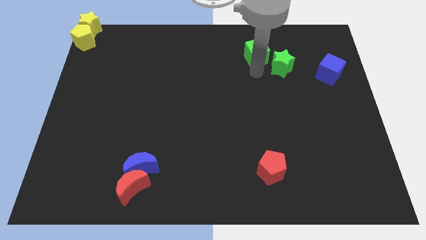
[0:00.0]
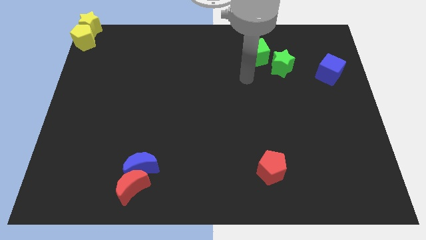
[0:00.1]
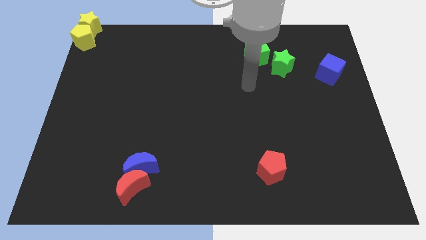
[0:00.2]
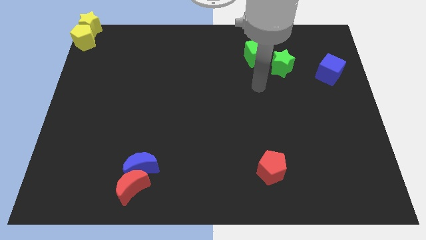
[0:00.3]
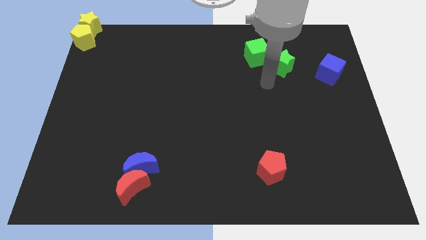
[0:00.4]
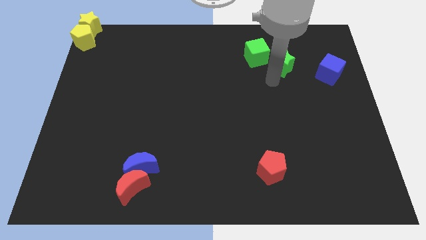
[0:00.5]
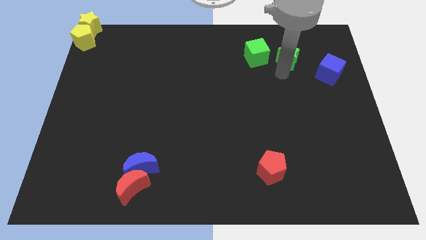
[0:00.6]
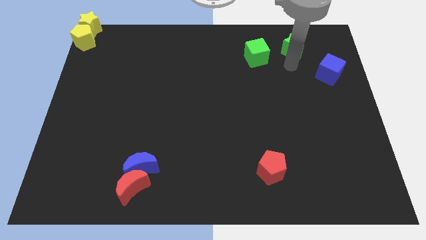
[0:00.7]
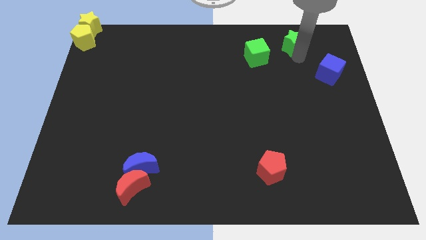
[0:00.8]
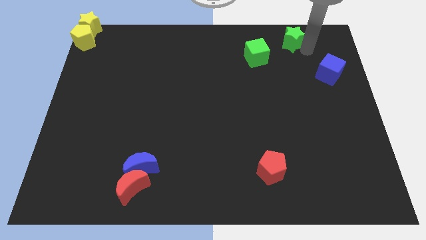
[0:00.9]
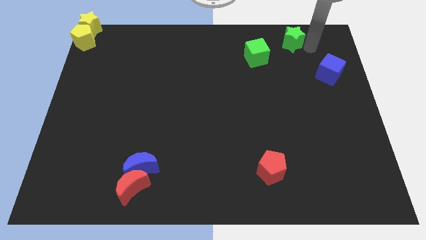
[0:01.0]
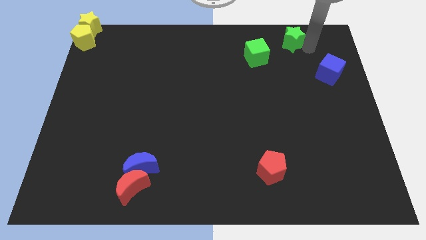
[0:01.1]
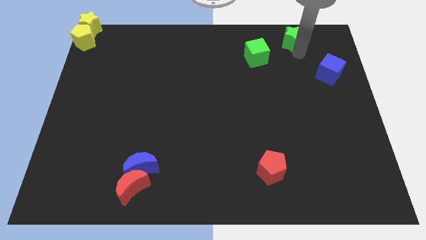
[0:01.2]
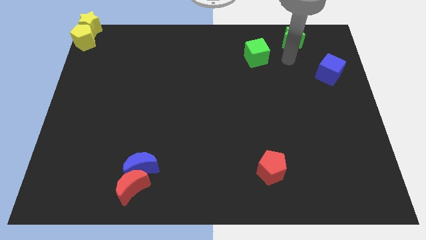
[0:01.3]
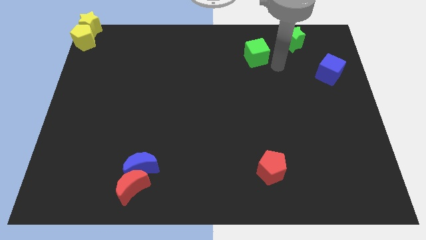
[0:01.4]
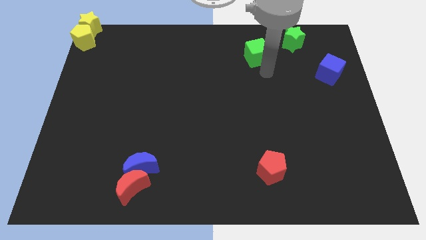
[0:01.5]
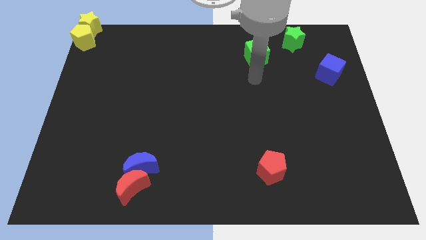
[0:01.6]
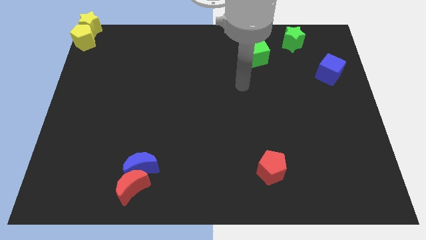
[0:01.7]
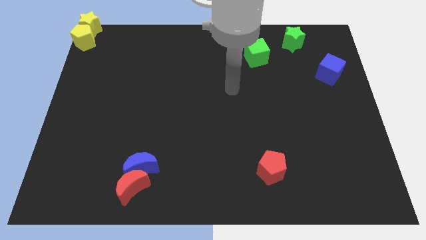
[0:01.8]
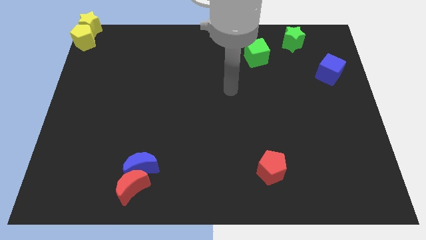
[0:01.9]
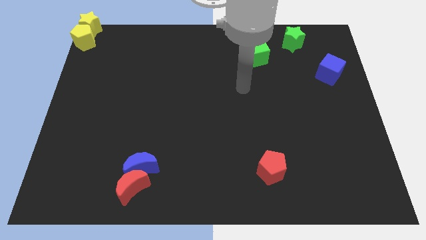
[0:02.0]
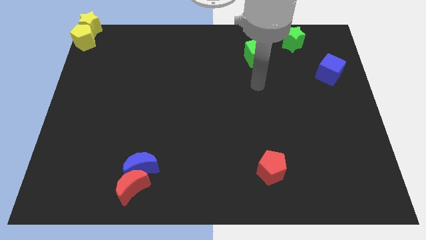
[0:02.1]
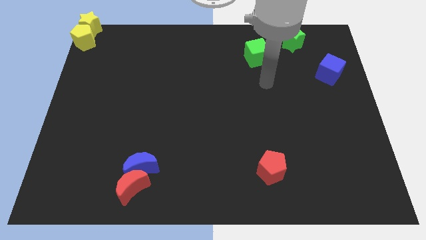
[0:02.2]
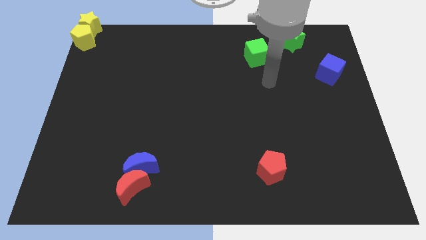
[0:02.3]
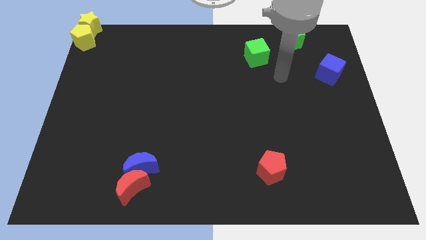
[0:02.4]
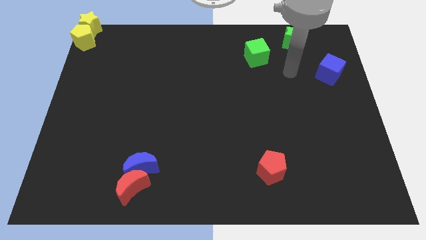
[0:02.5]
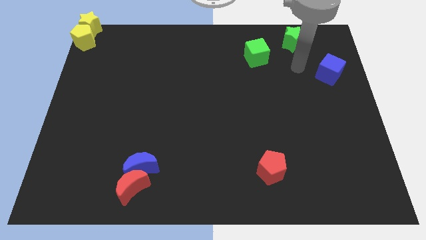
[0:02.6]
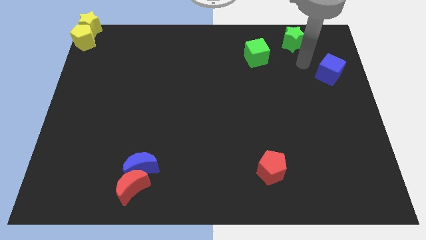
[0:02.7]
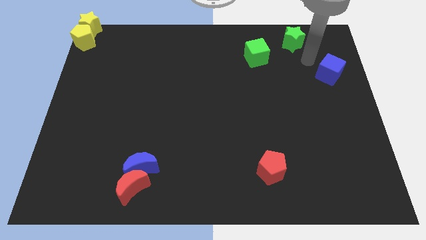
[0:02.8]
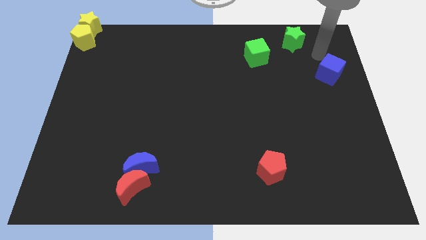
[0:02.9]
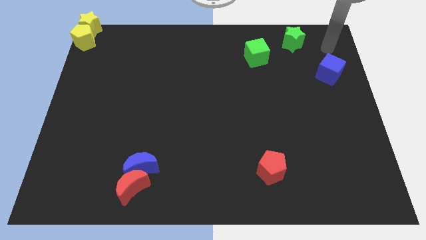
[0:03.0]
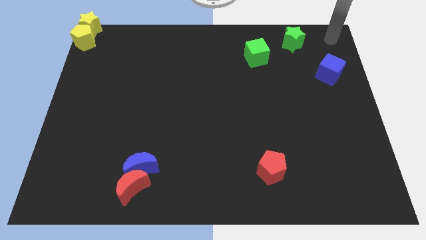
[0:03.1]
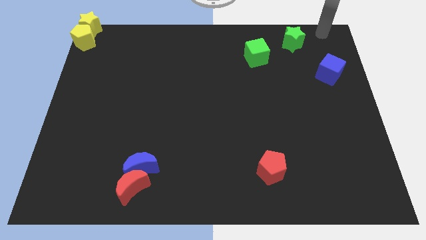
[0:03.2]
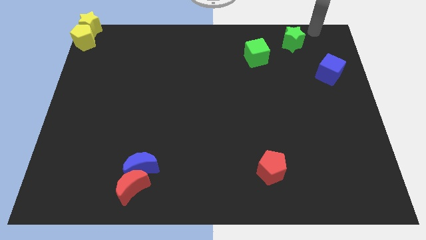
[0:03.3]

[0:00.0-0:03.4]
place the green star above the blue cube

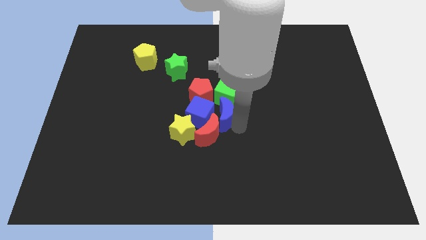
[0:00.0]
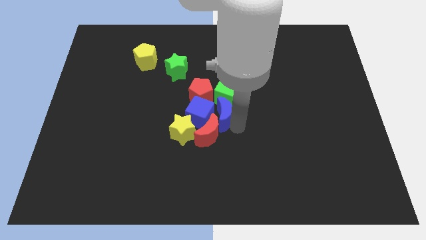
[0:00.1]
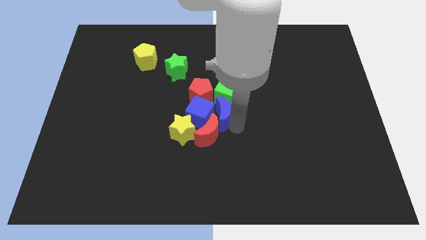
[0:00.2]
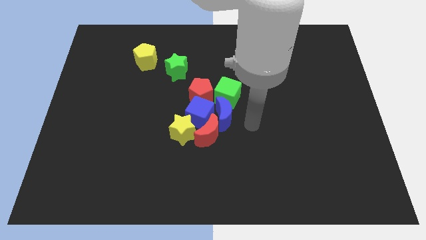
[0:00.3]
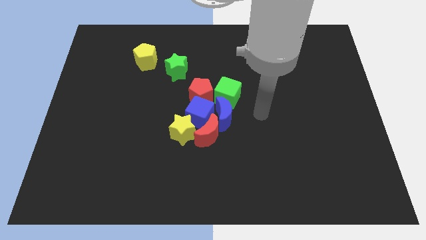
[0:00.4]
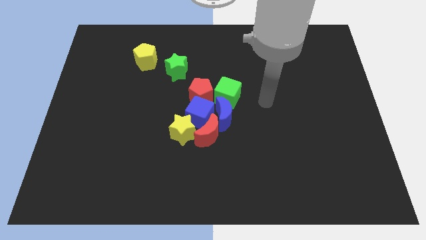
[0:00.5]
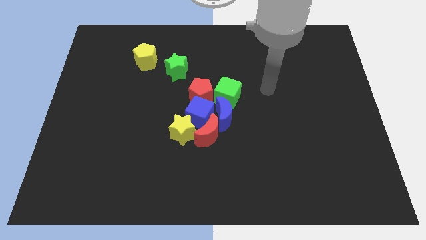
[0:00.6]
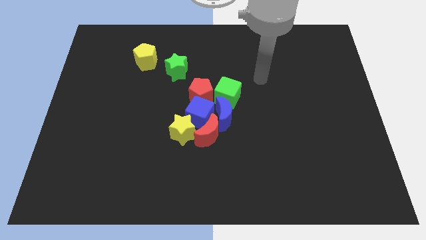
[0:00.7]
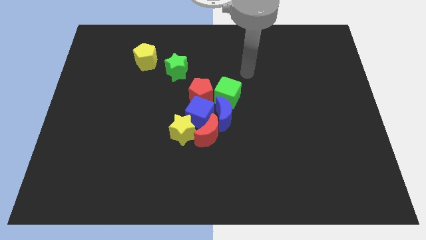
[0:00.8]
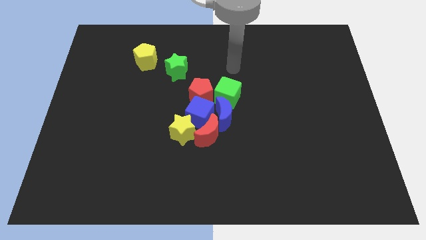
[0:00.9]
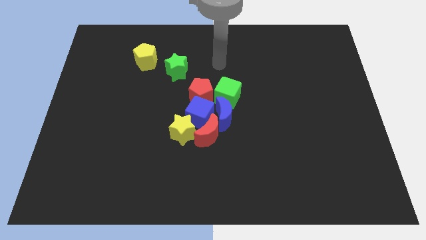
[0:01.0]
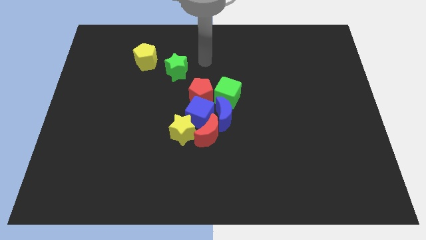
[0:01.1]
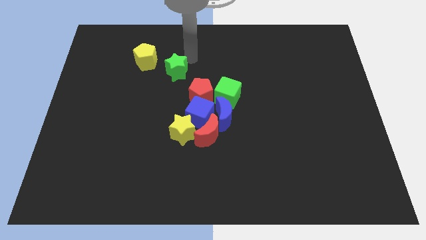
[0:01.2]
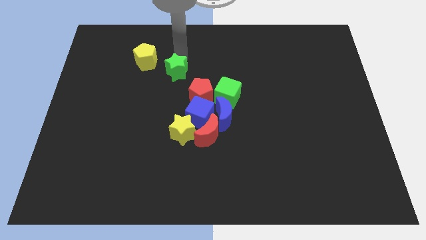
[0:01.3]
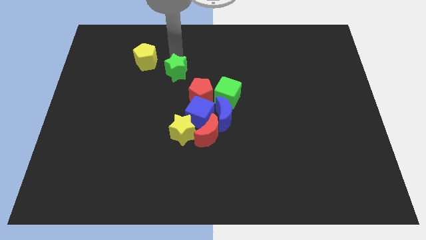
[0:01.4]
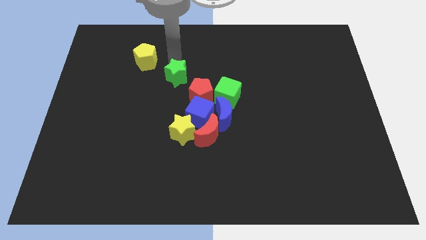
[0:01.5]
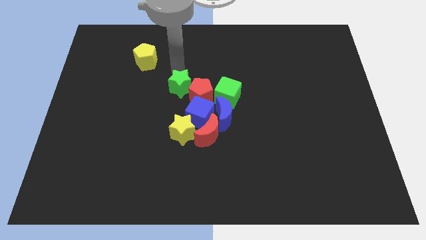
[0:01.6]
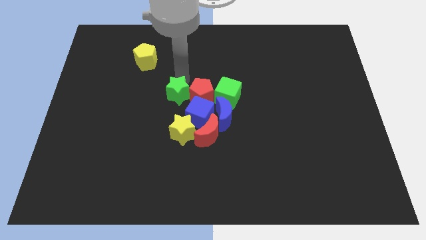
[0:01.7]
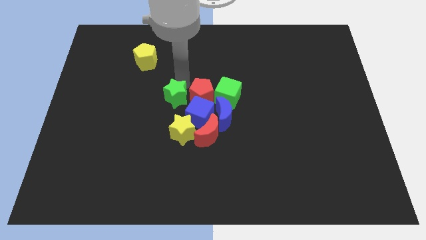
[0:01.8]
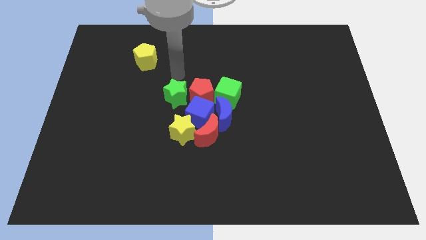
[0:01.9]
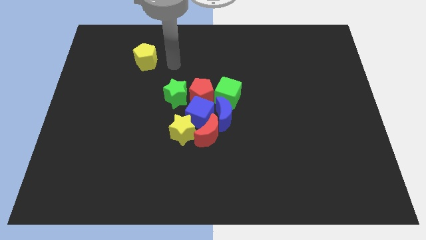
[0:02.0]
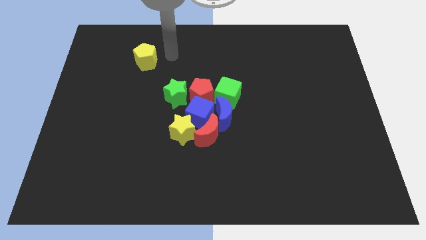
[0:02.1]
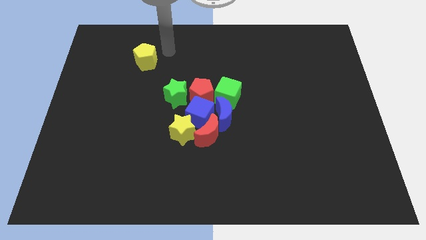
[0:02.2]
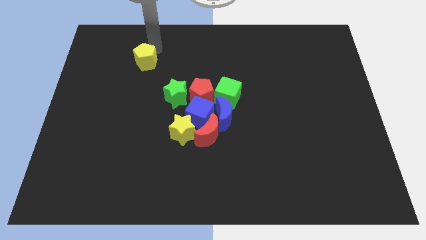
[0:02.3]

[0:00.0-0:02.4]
push the green star to the left of the red pentagon

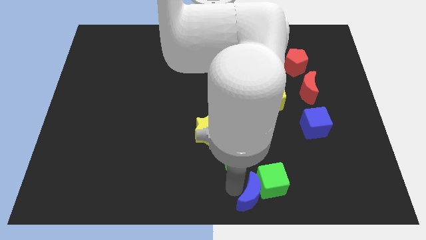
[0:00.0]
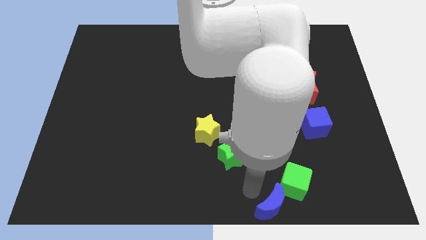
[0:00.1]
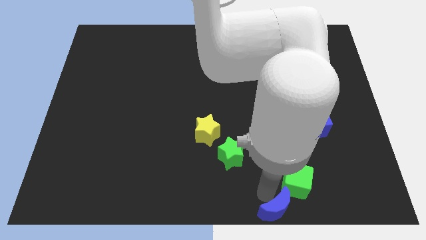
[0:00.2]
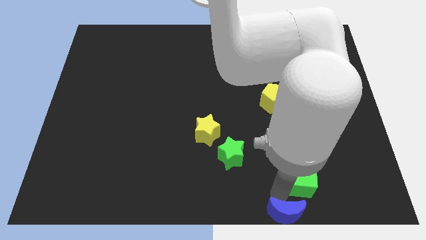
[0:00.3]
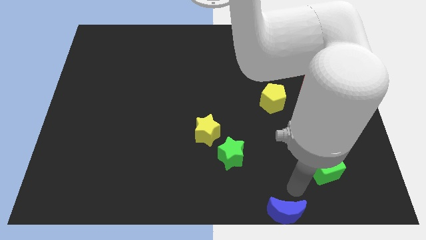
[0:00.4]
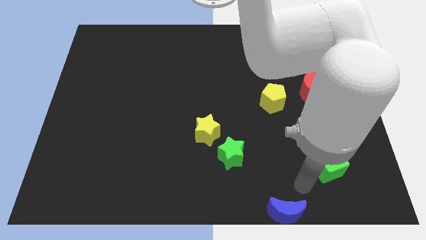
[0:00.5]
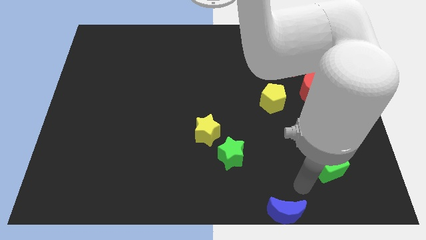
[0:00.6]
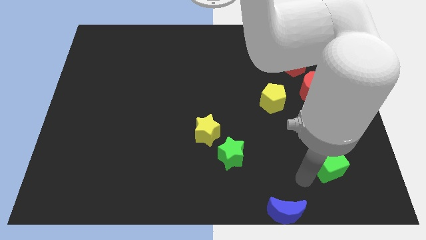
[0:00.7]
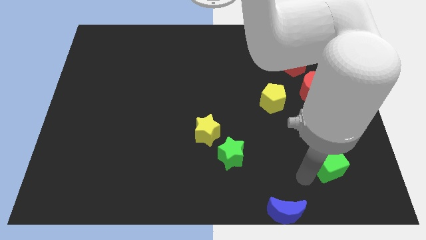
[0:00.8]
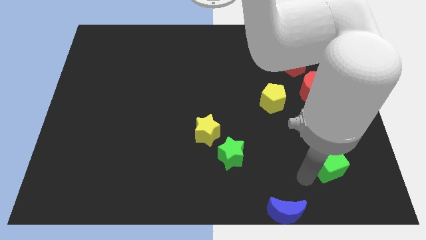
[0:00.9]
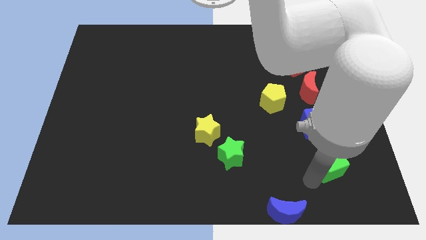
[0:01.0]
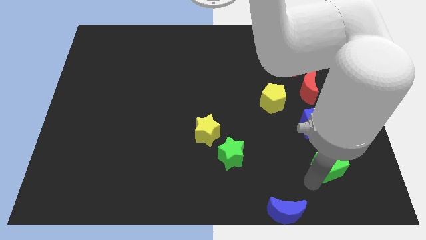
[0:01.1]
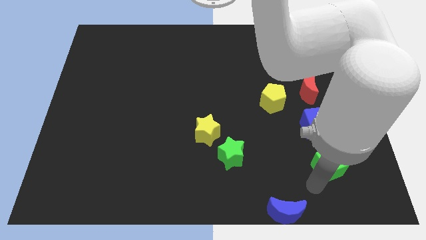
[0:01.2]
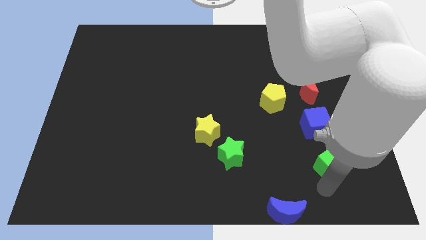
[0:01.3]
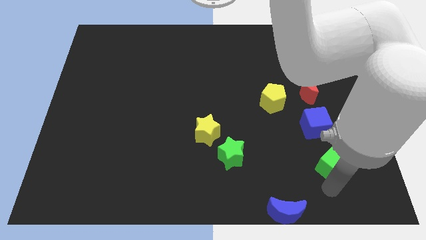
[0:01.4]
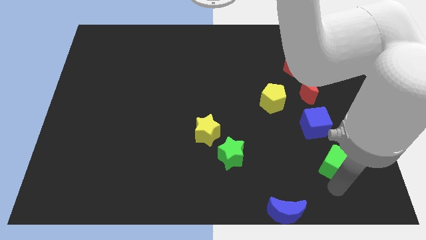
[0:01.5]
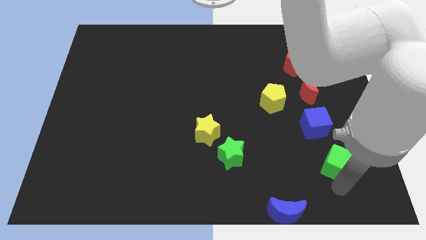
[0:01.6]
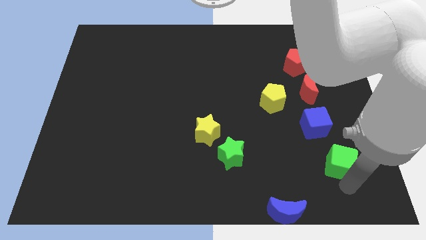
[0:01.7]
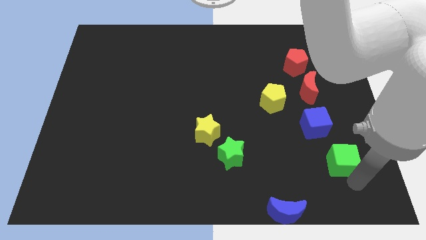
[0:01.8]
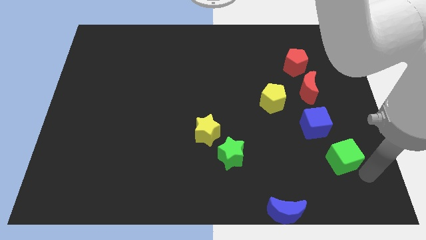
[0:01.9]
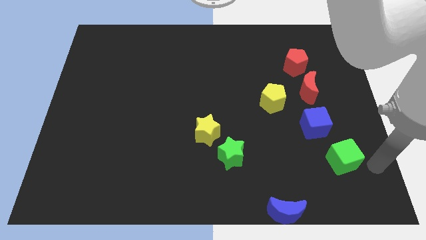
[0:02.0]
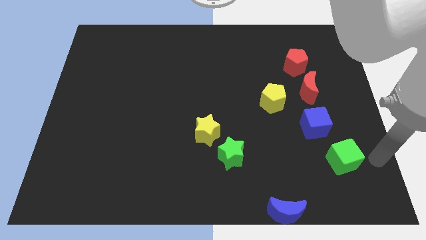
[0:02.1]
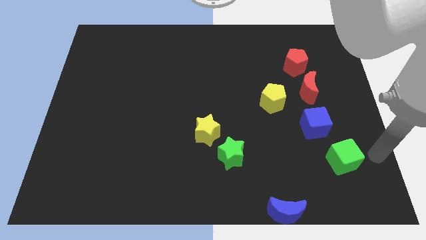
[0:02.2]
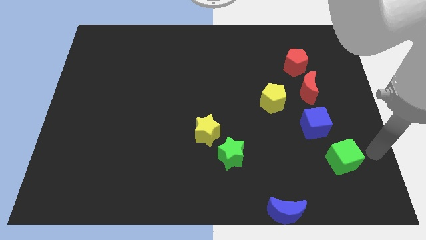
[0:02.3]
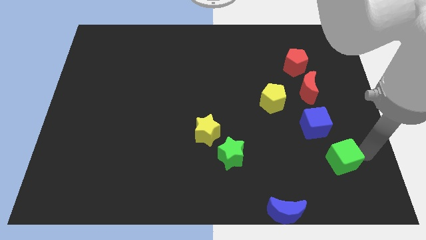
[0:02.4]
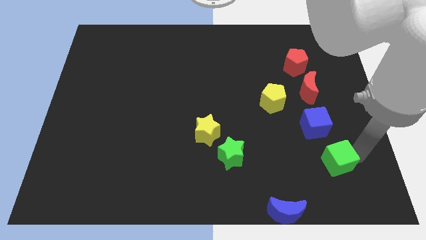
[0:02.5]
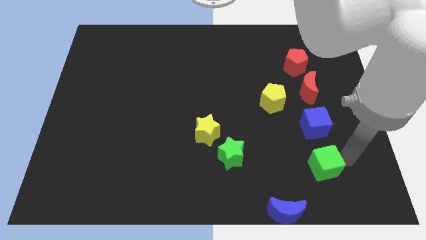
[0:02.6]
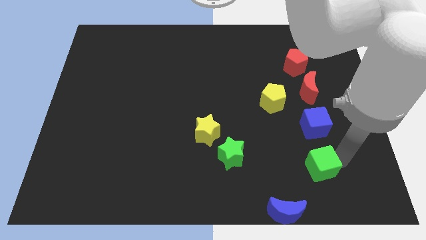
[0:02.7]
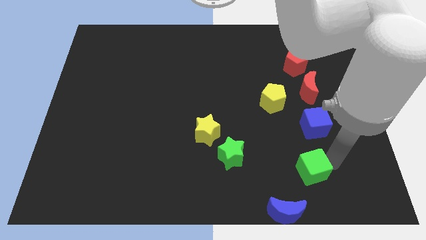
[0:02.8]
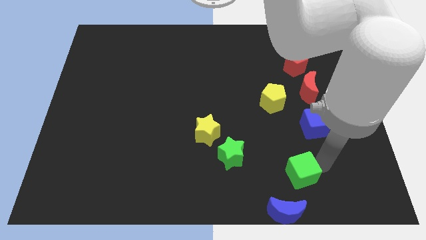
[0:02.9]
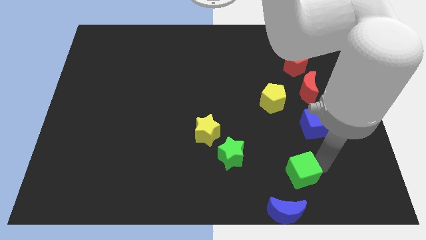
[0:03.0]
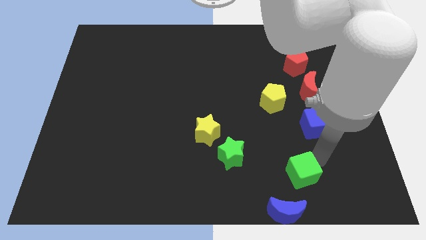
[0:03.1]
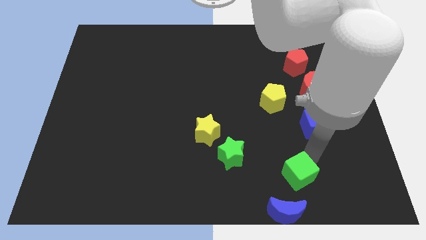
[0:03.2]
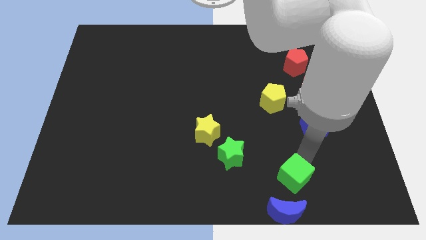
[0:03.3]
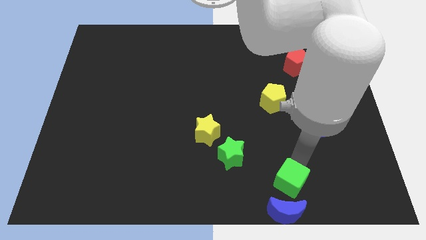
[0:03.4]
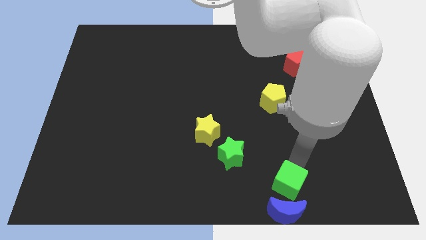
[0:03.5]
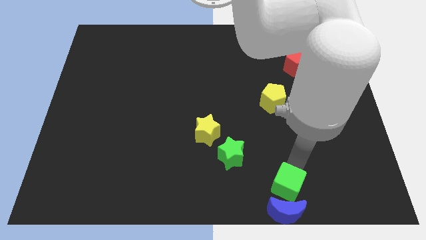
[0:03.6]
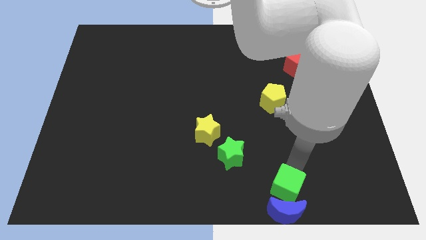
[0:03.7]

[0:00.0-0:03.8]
place the green cube to the top side of the blue crescent
